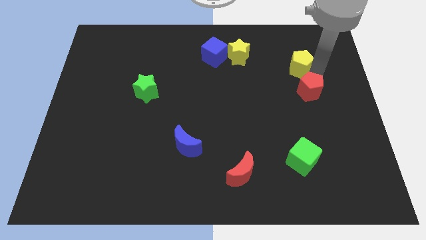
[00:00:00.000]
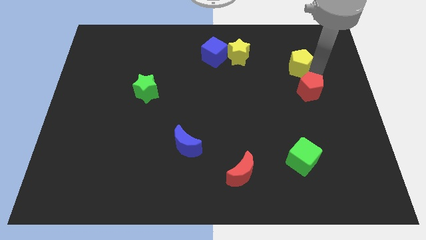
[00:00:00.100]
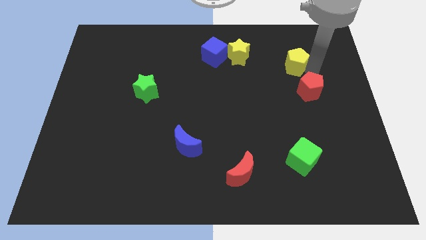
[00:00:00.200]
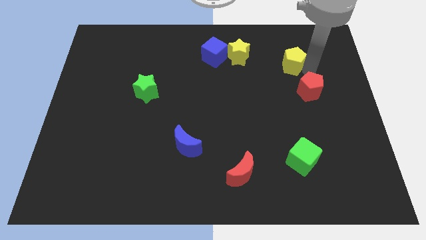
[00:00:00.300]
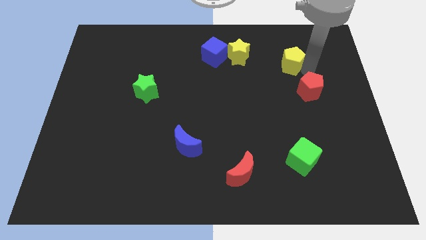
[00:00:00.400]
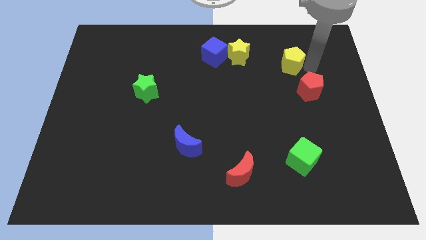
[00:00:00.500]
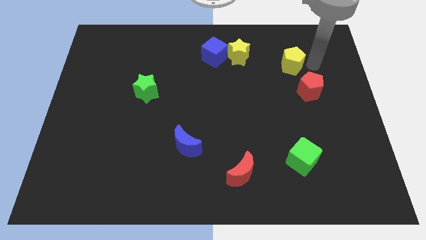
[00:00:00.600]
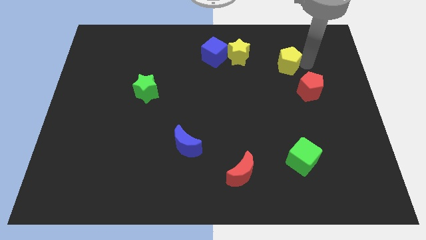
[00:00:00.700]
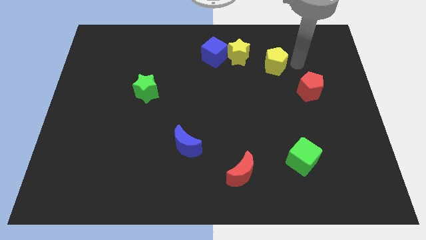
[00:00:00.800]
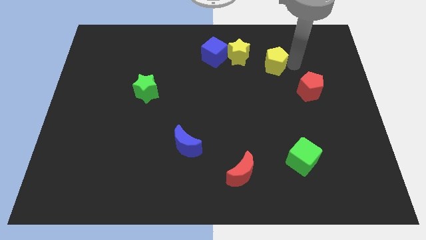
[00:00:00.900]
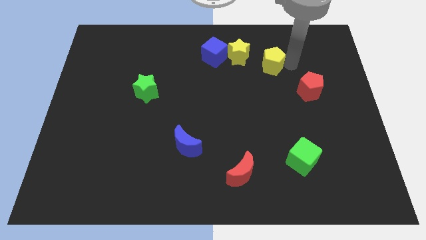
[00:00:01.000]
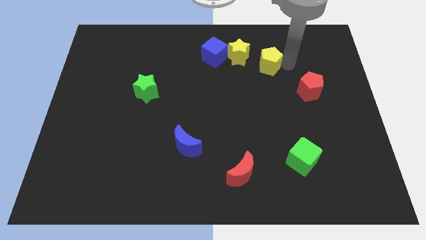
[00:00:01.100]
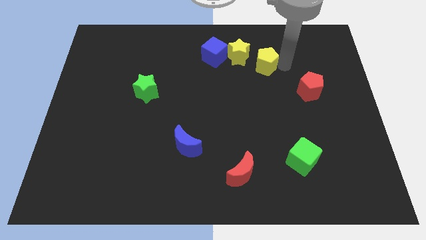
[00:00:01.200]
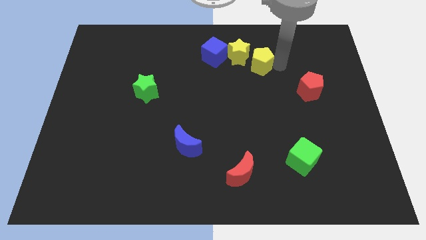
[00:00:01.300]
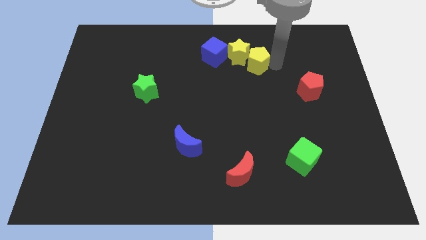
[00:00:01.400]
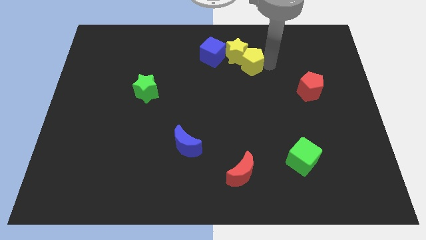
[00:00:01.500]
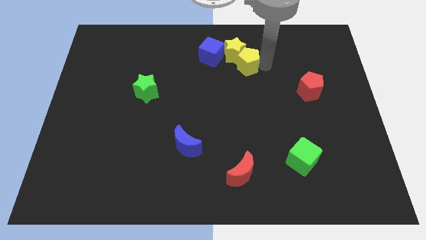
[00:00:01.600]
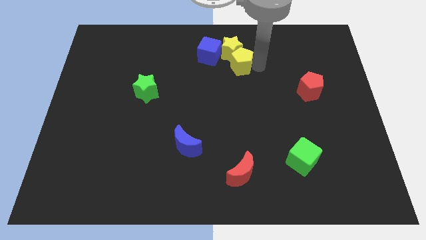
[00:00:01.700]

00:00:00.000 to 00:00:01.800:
push the yellow pentagon into the yellow star

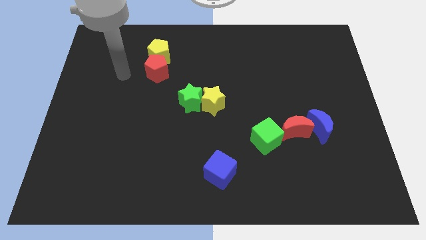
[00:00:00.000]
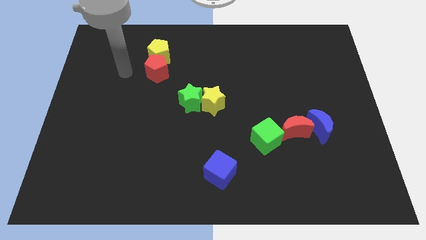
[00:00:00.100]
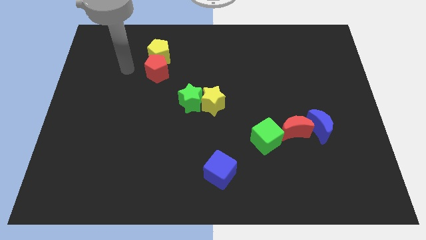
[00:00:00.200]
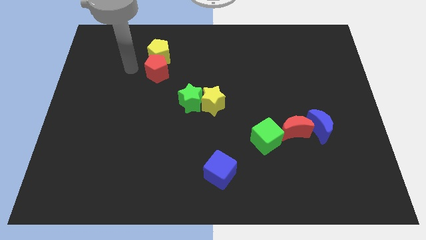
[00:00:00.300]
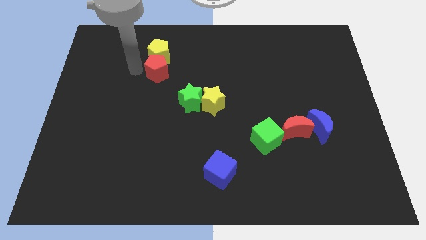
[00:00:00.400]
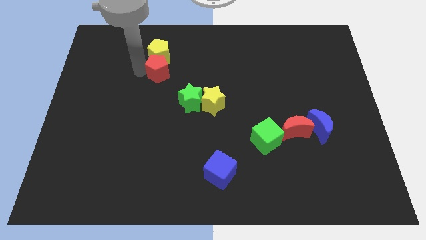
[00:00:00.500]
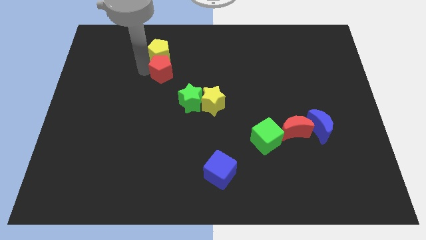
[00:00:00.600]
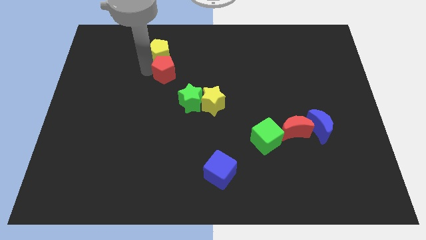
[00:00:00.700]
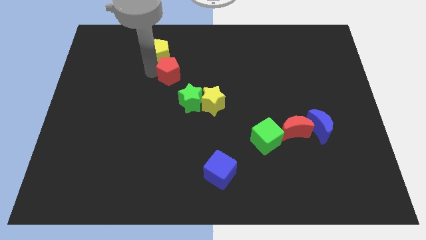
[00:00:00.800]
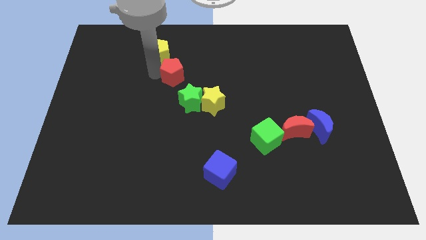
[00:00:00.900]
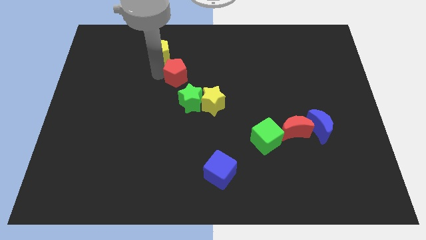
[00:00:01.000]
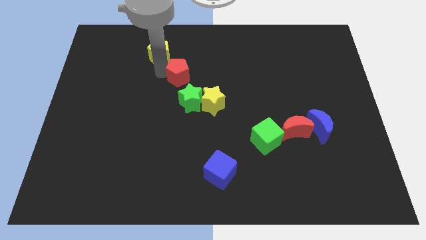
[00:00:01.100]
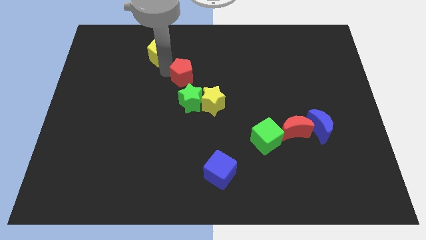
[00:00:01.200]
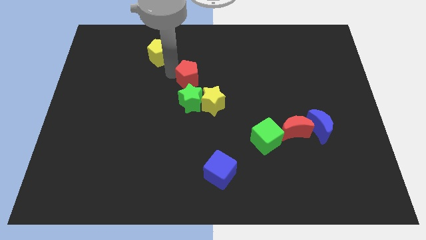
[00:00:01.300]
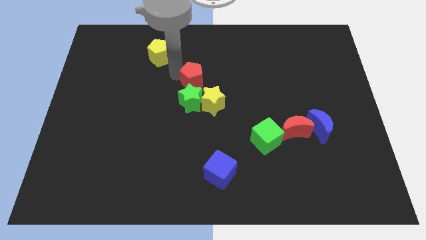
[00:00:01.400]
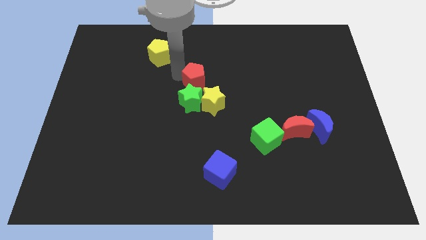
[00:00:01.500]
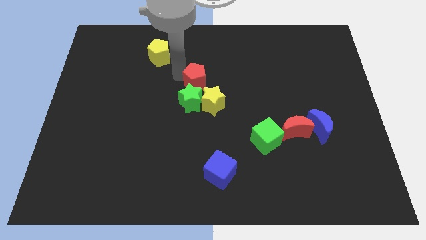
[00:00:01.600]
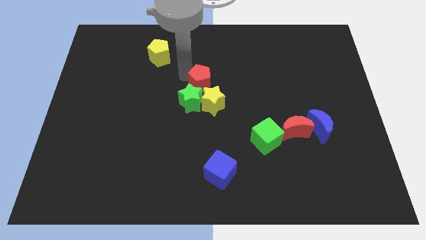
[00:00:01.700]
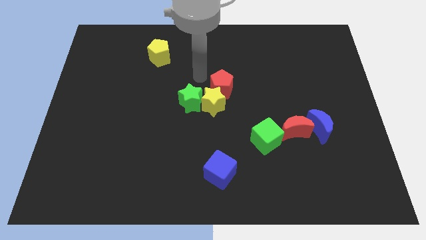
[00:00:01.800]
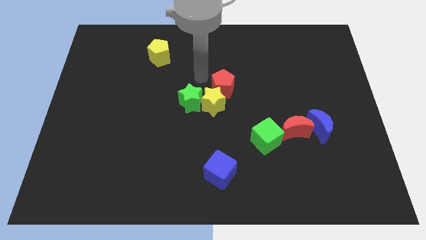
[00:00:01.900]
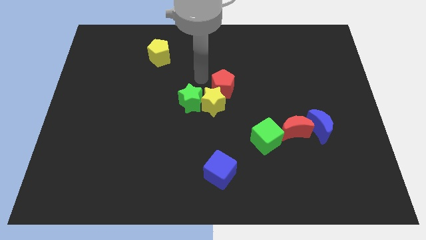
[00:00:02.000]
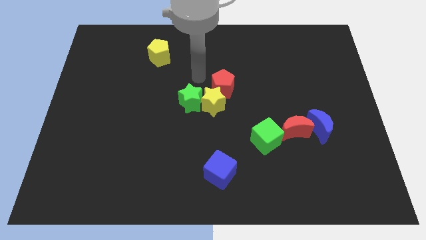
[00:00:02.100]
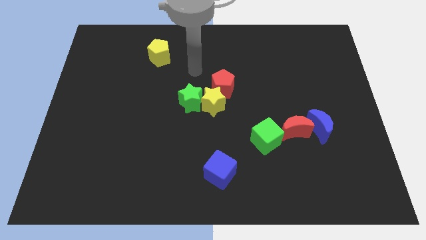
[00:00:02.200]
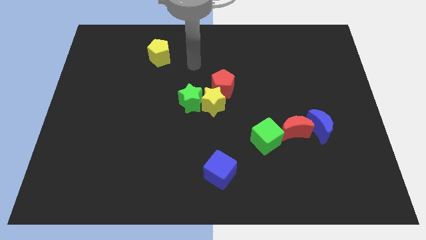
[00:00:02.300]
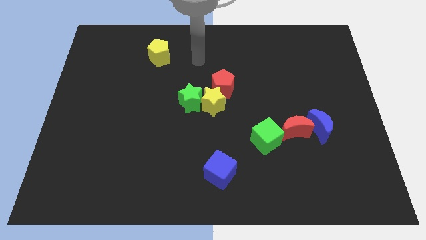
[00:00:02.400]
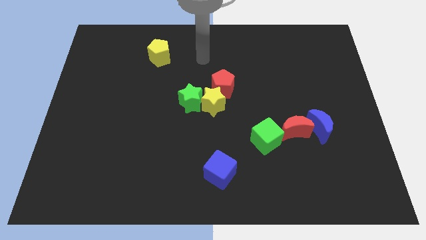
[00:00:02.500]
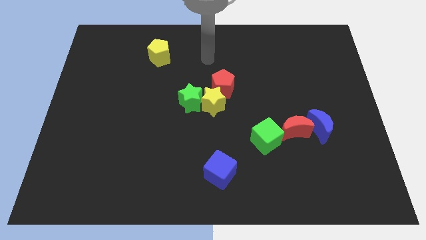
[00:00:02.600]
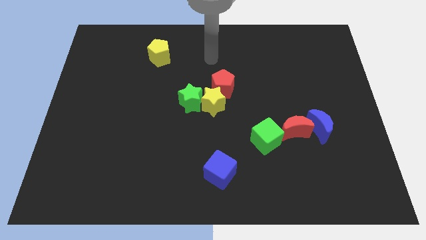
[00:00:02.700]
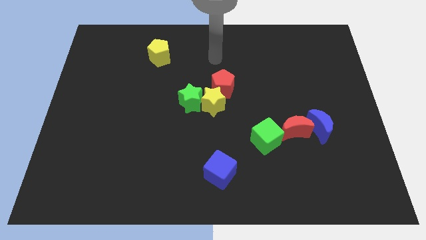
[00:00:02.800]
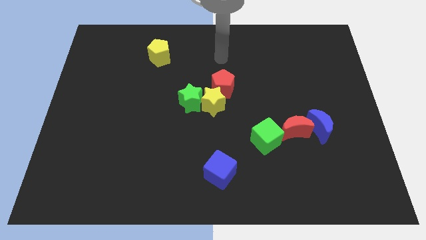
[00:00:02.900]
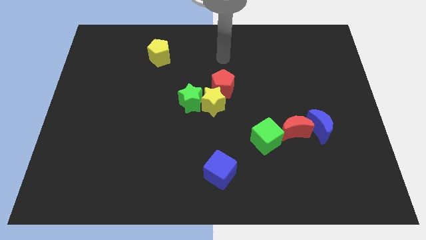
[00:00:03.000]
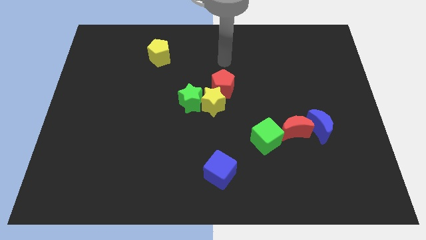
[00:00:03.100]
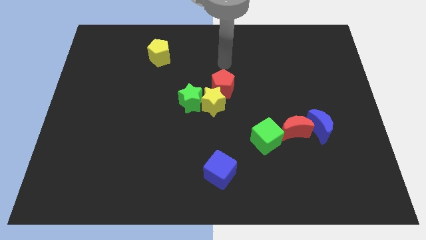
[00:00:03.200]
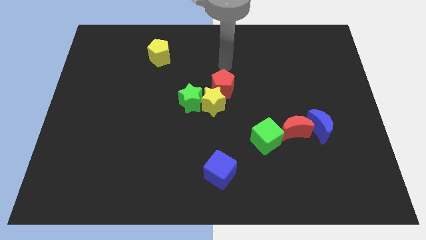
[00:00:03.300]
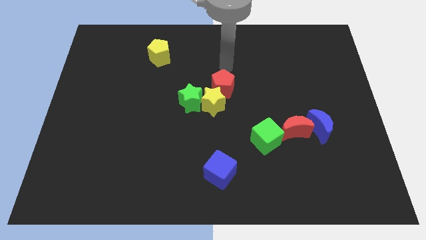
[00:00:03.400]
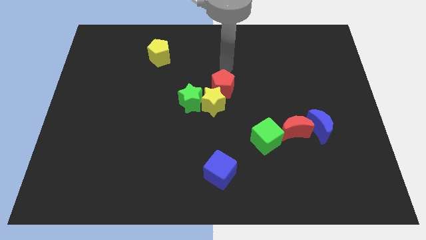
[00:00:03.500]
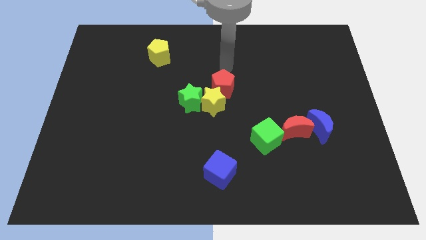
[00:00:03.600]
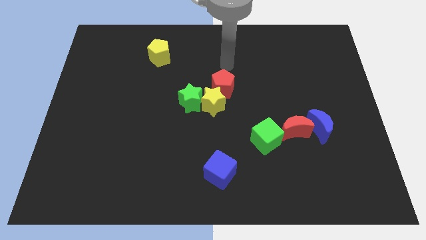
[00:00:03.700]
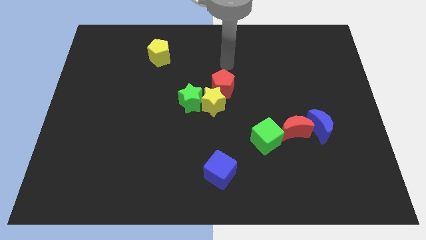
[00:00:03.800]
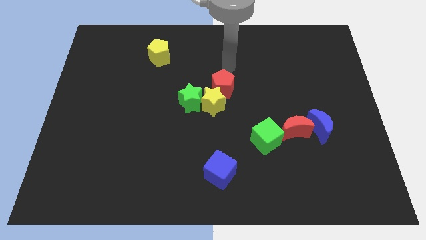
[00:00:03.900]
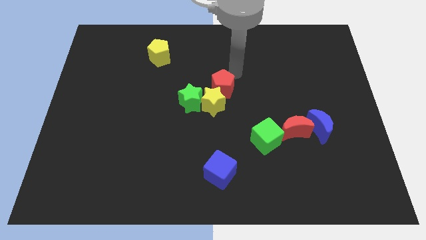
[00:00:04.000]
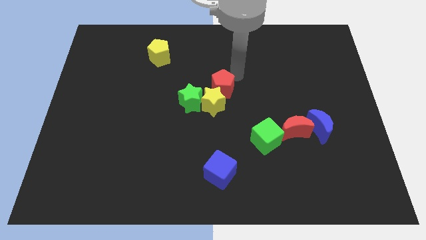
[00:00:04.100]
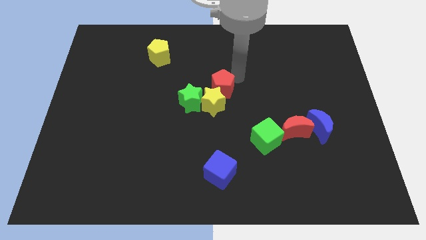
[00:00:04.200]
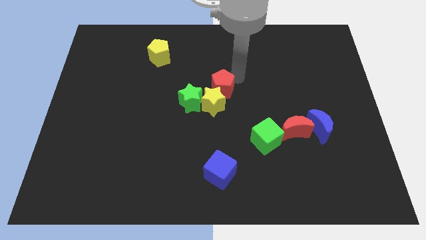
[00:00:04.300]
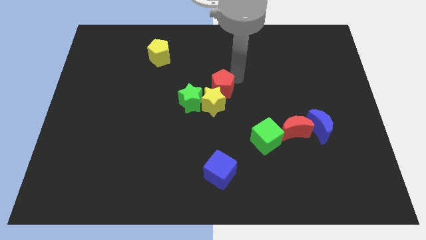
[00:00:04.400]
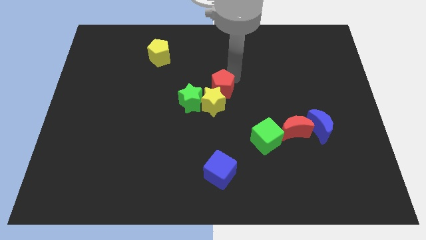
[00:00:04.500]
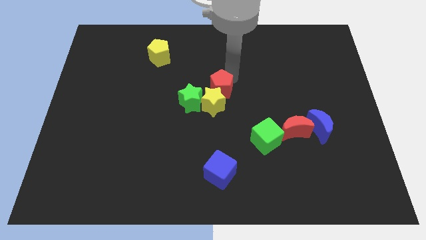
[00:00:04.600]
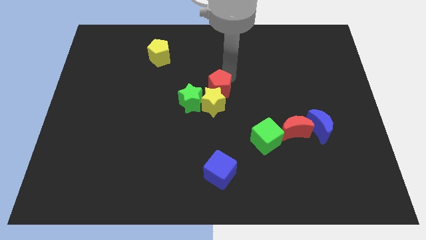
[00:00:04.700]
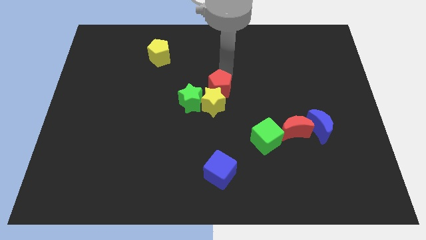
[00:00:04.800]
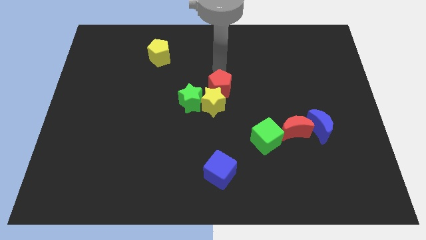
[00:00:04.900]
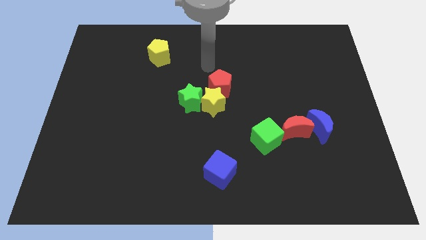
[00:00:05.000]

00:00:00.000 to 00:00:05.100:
move the red pentagon to the top right of the yellow star

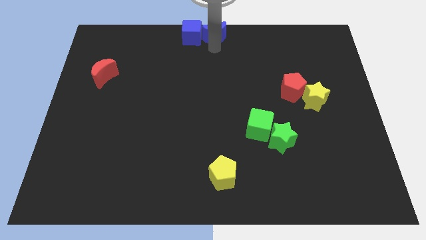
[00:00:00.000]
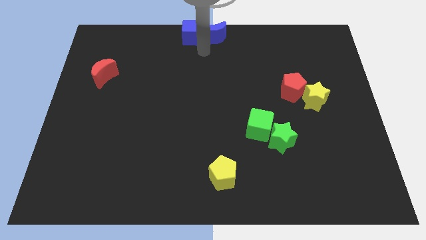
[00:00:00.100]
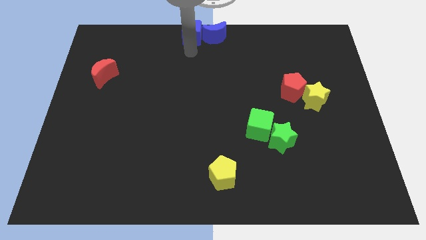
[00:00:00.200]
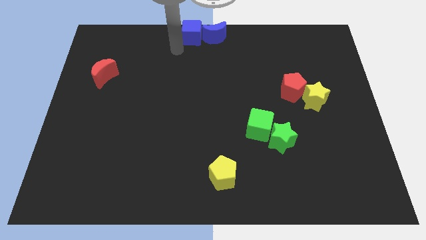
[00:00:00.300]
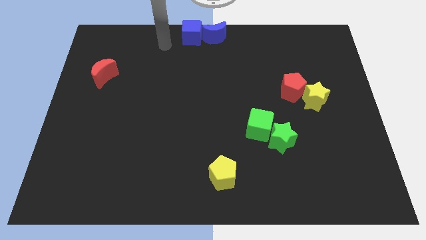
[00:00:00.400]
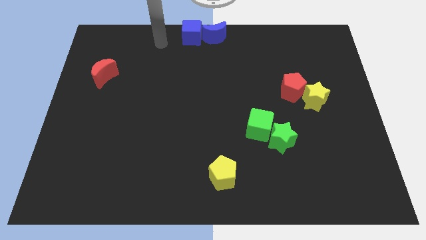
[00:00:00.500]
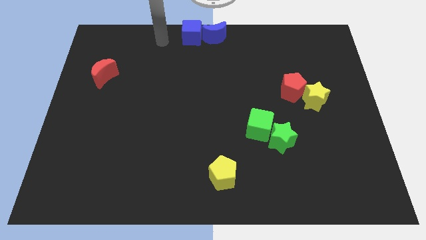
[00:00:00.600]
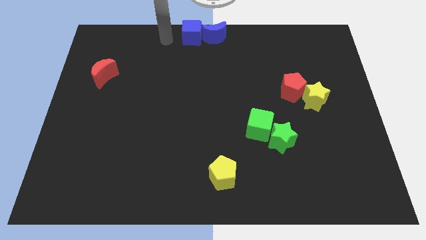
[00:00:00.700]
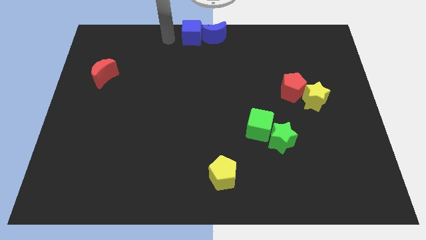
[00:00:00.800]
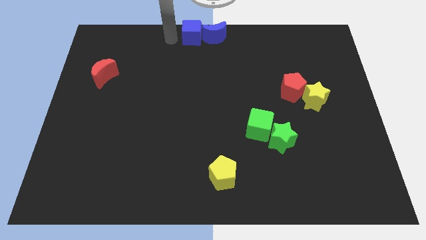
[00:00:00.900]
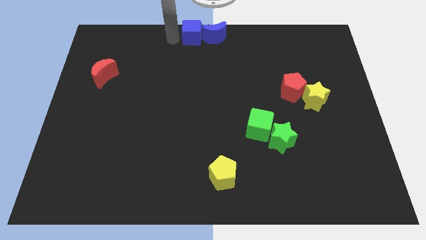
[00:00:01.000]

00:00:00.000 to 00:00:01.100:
go away from the blue moon

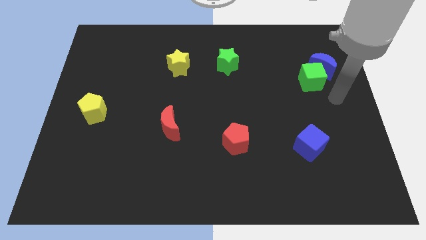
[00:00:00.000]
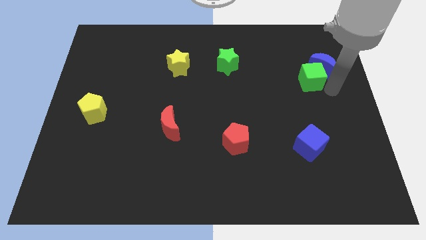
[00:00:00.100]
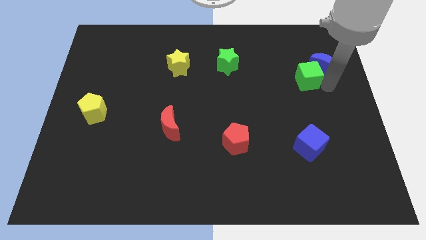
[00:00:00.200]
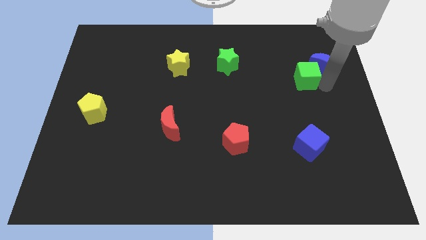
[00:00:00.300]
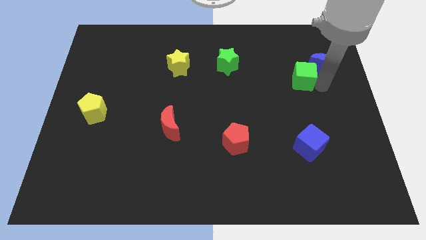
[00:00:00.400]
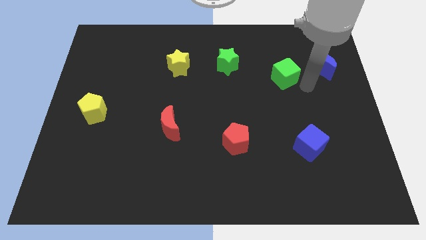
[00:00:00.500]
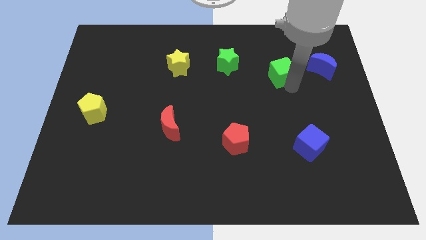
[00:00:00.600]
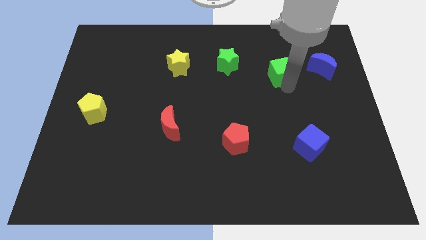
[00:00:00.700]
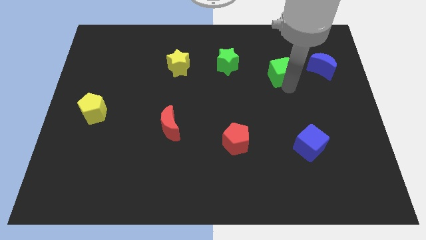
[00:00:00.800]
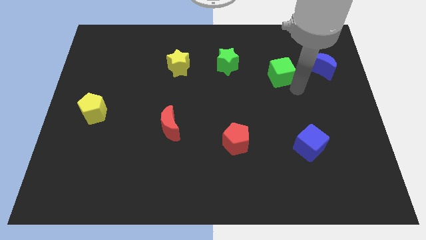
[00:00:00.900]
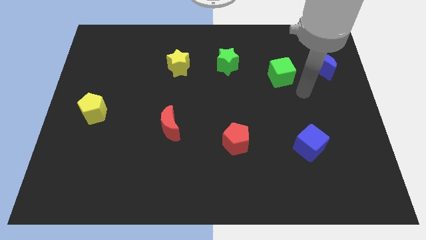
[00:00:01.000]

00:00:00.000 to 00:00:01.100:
separate green cube from blue moon
